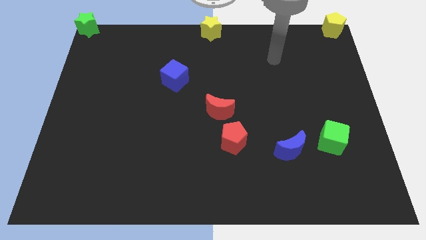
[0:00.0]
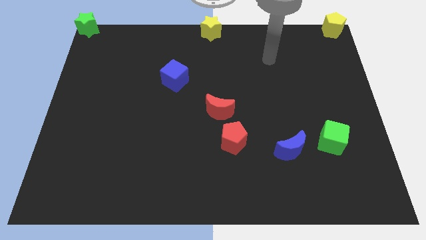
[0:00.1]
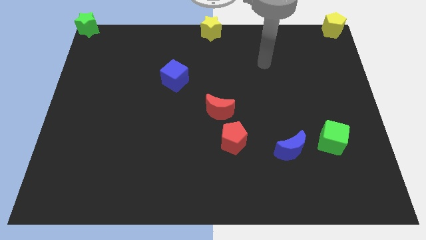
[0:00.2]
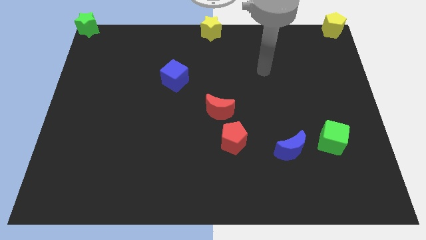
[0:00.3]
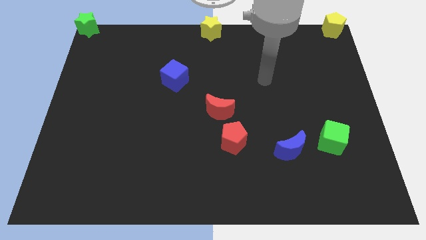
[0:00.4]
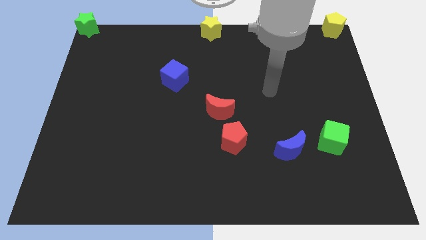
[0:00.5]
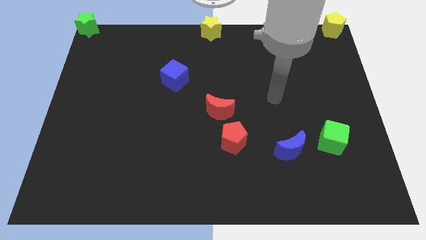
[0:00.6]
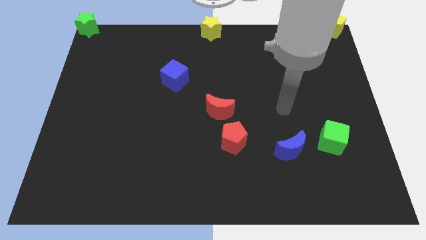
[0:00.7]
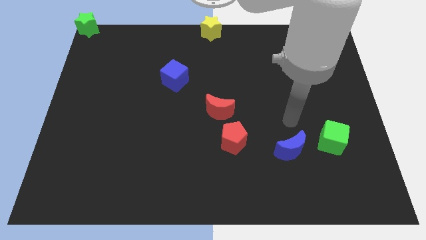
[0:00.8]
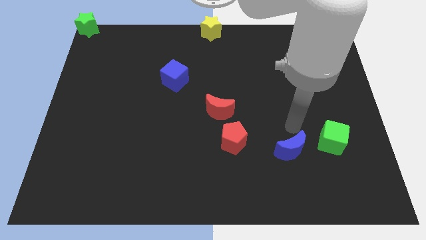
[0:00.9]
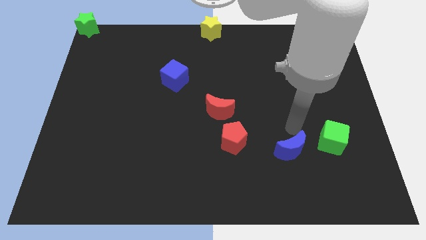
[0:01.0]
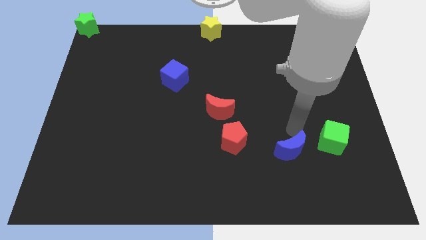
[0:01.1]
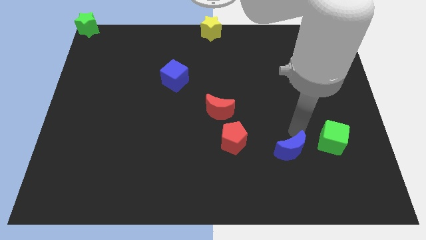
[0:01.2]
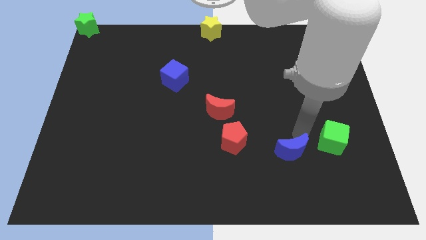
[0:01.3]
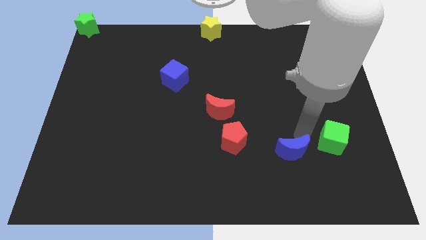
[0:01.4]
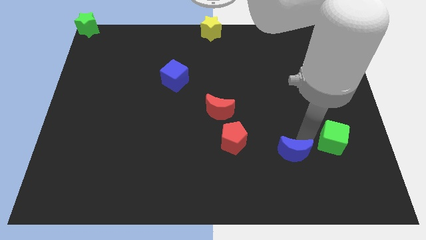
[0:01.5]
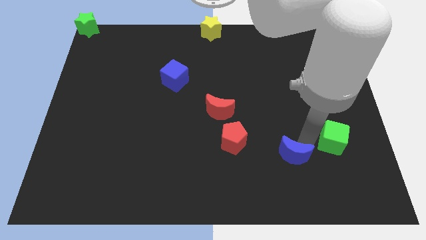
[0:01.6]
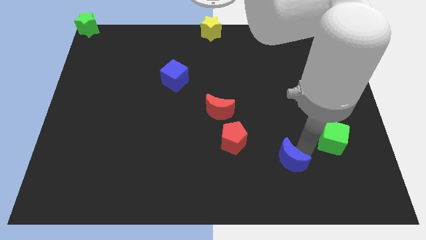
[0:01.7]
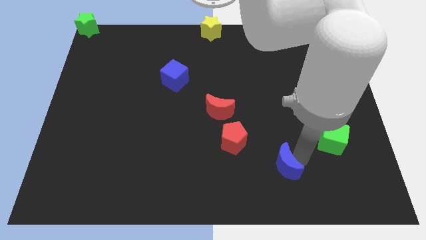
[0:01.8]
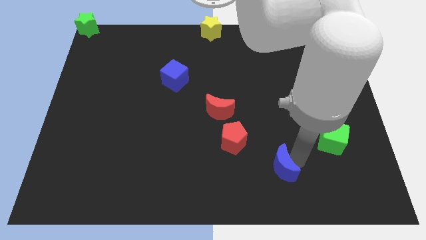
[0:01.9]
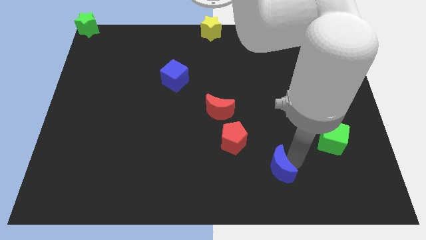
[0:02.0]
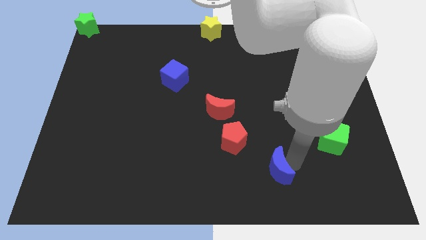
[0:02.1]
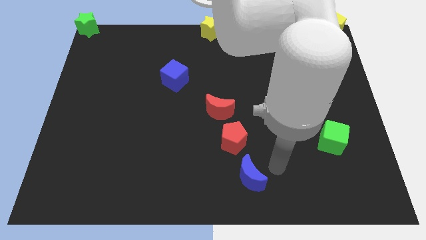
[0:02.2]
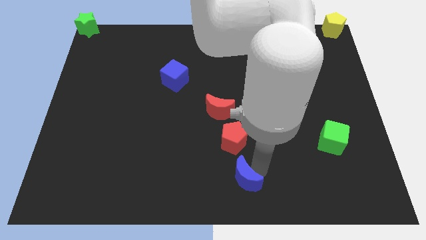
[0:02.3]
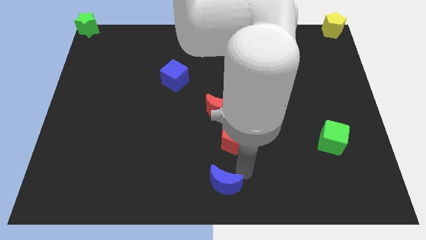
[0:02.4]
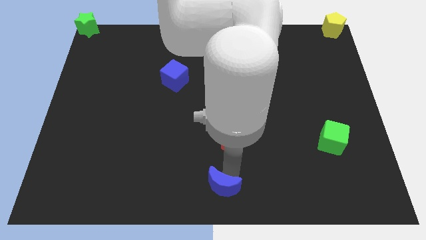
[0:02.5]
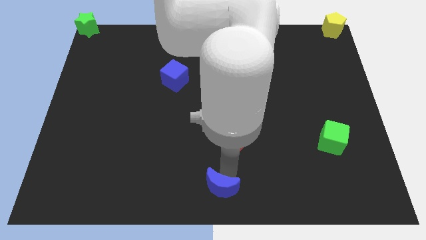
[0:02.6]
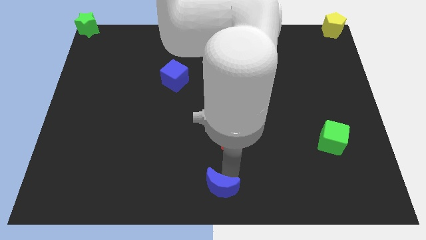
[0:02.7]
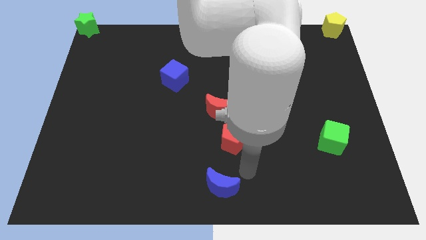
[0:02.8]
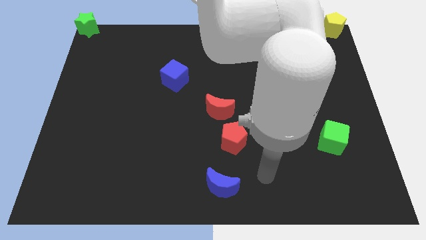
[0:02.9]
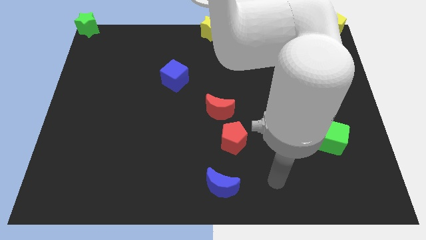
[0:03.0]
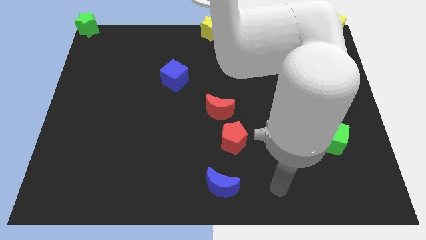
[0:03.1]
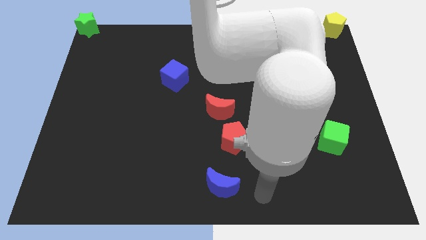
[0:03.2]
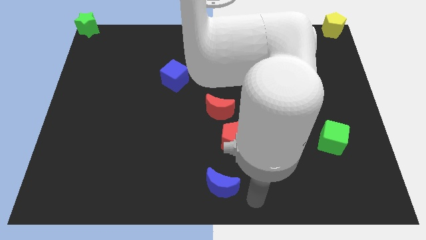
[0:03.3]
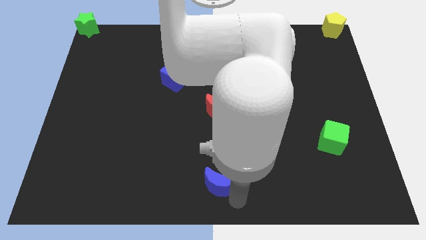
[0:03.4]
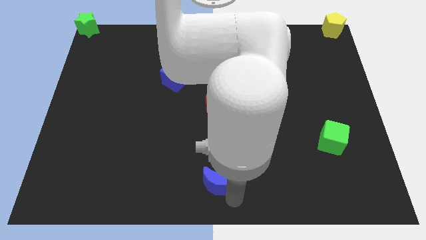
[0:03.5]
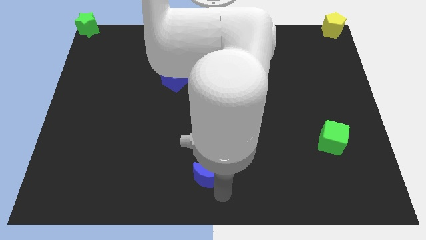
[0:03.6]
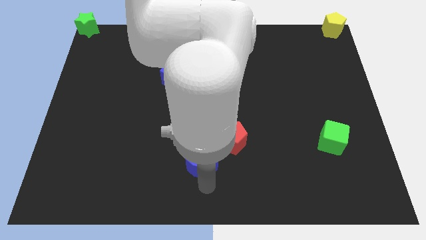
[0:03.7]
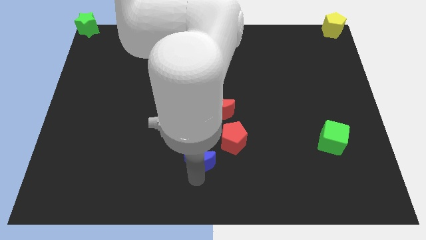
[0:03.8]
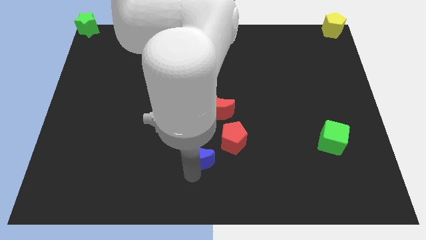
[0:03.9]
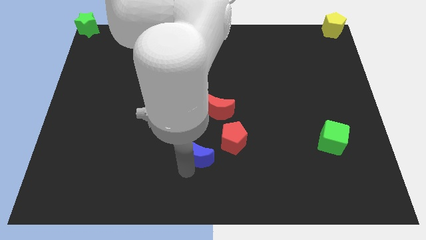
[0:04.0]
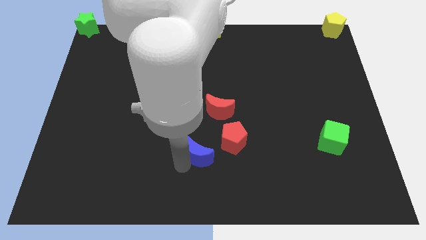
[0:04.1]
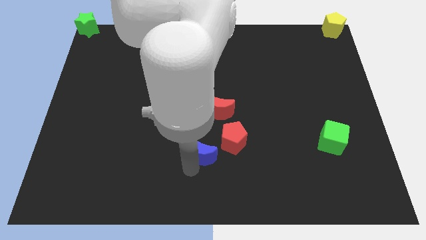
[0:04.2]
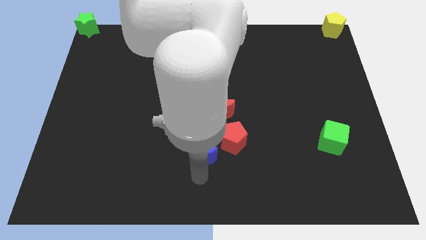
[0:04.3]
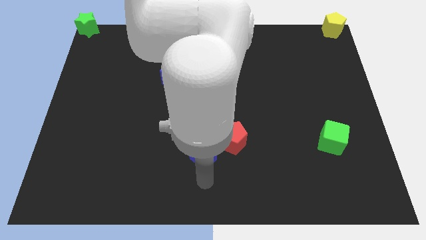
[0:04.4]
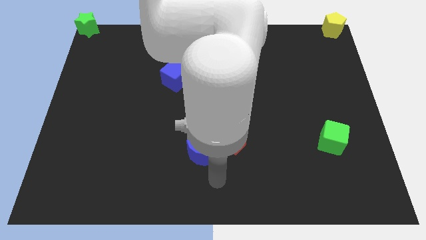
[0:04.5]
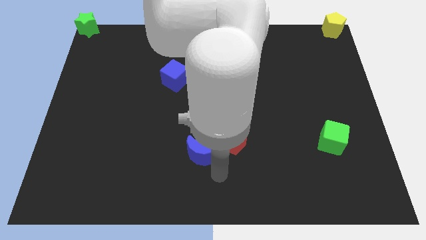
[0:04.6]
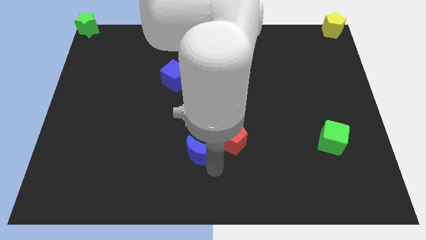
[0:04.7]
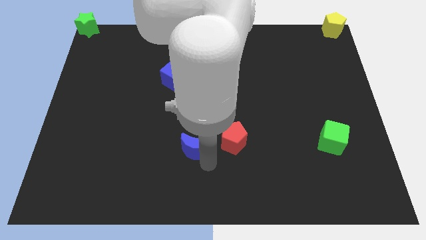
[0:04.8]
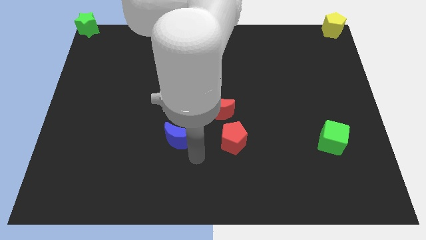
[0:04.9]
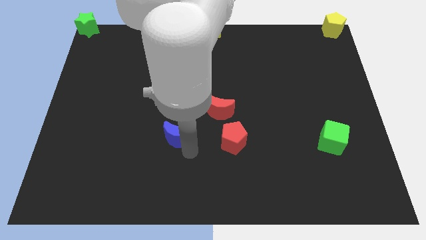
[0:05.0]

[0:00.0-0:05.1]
place the blue moon below the red moon

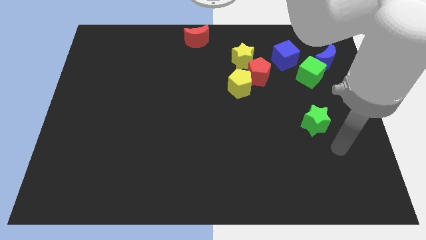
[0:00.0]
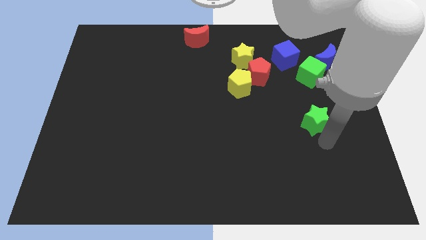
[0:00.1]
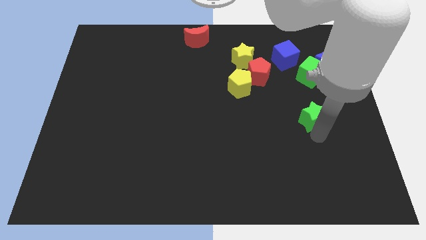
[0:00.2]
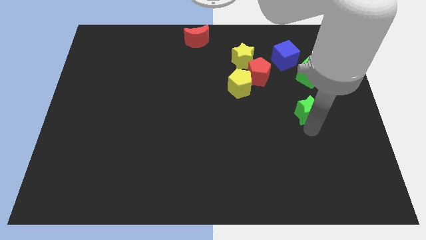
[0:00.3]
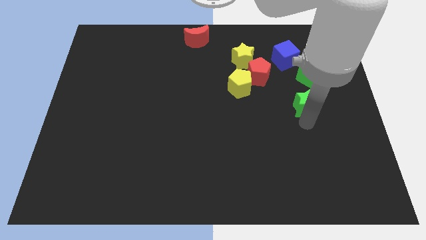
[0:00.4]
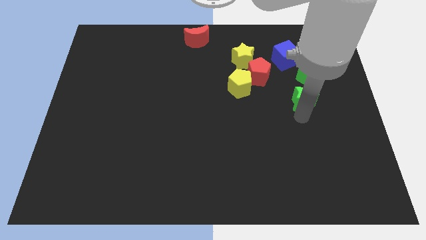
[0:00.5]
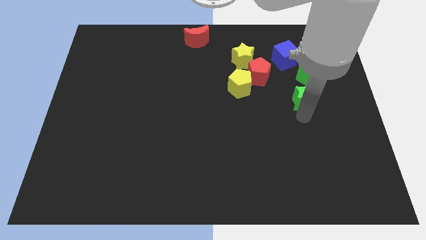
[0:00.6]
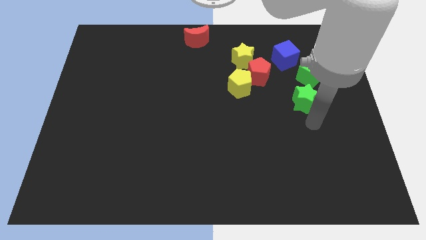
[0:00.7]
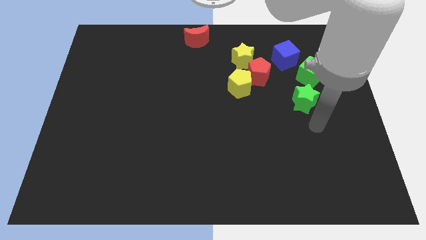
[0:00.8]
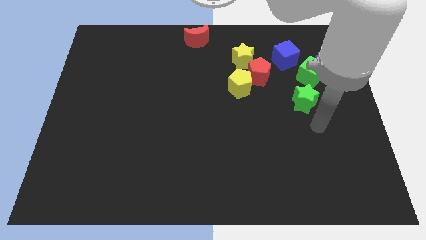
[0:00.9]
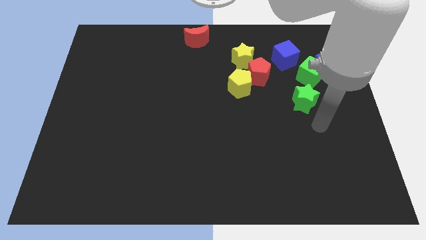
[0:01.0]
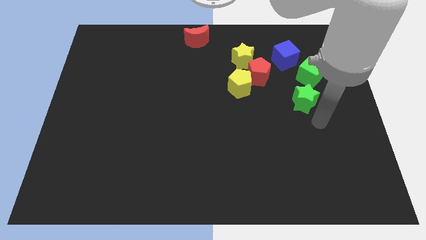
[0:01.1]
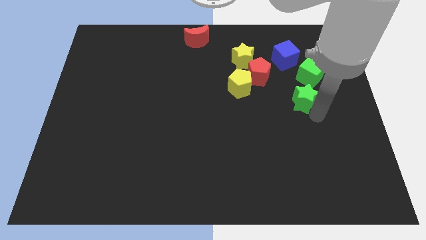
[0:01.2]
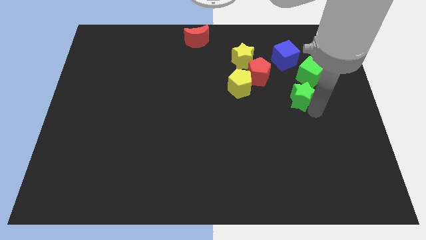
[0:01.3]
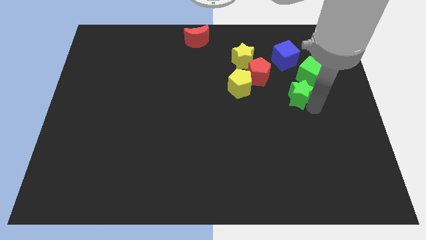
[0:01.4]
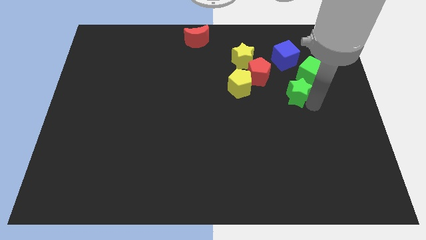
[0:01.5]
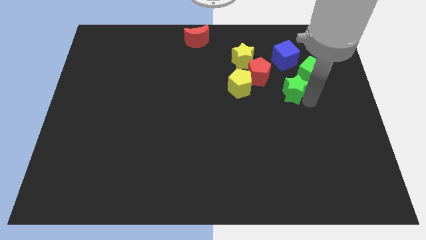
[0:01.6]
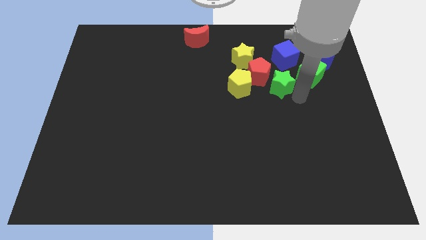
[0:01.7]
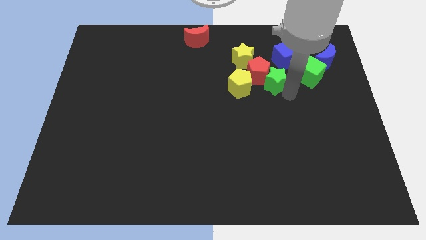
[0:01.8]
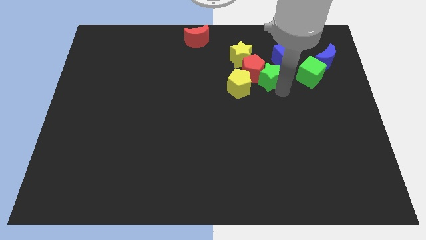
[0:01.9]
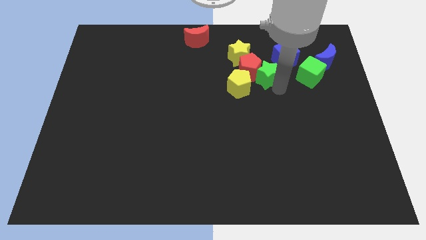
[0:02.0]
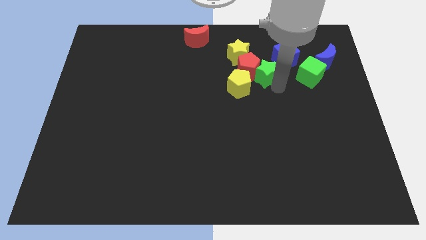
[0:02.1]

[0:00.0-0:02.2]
slide the green star into the red pentagon

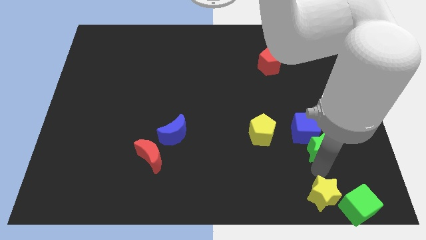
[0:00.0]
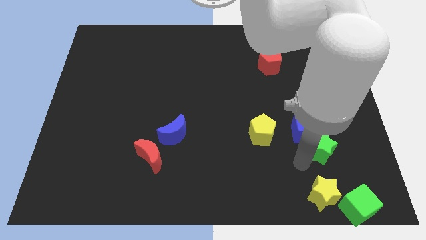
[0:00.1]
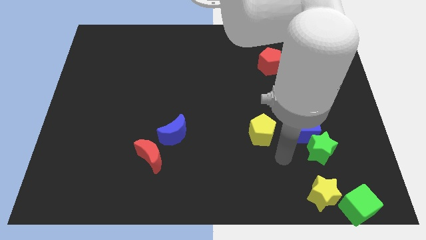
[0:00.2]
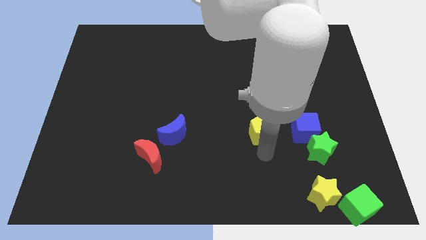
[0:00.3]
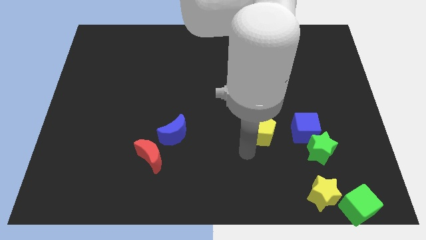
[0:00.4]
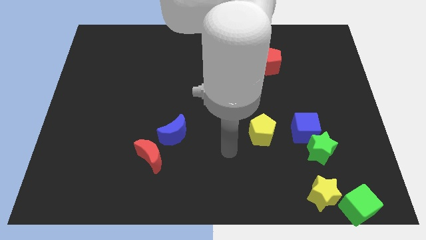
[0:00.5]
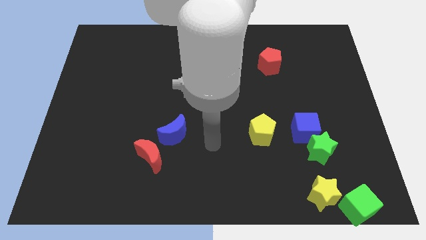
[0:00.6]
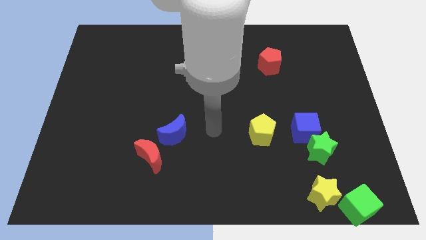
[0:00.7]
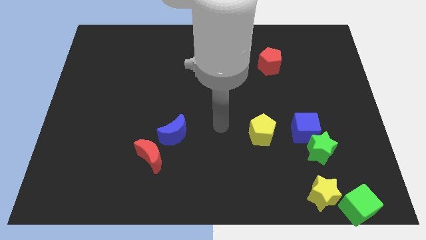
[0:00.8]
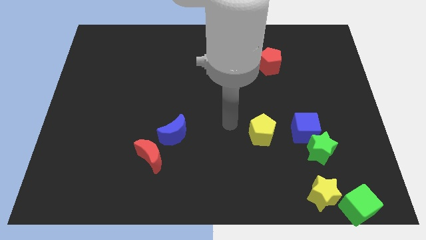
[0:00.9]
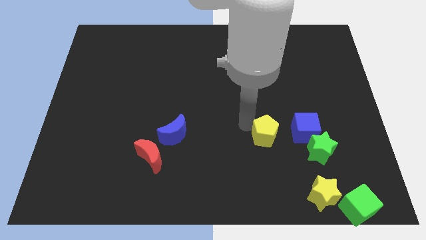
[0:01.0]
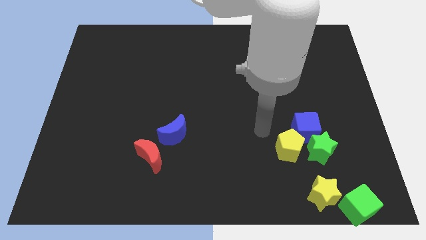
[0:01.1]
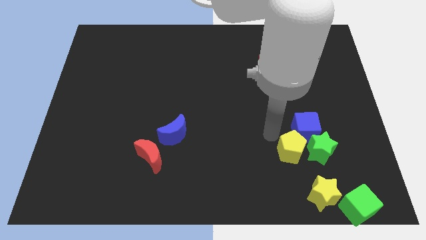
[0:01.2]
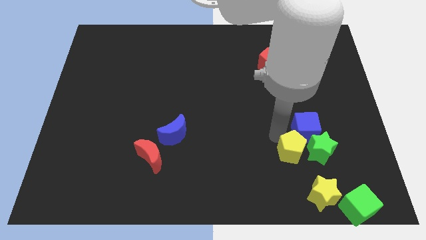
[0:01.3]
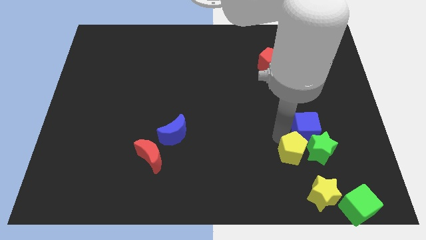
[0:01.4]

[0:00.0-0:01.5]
move the yellow pentagon to the left of the green star

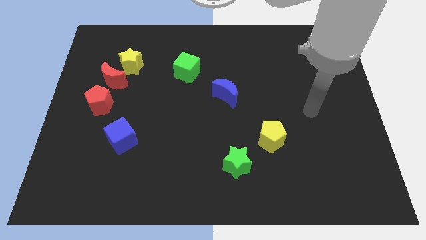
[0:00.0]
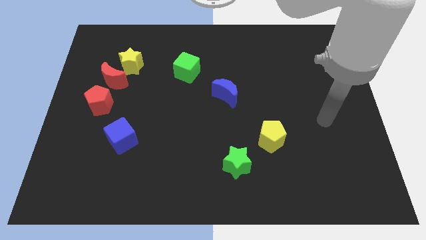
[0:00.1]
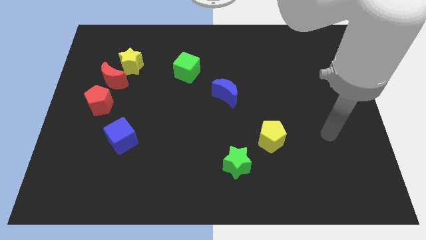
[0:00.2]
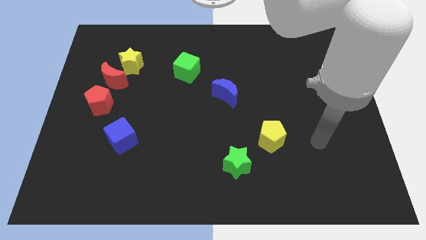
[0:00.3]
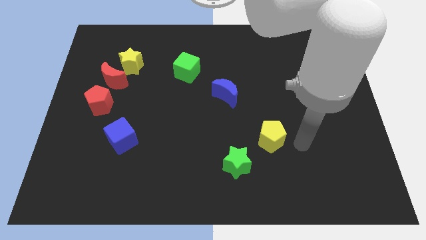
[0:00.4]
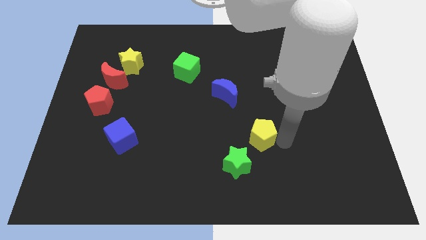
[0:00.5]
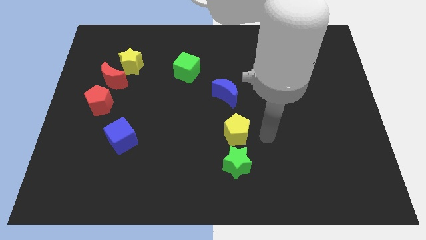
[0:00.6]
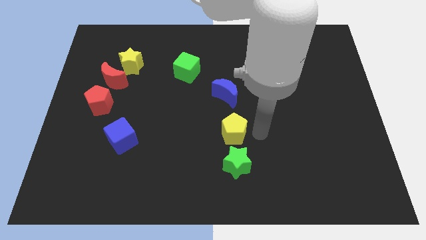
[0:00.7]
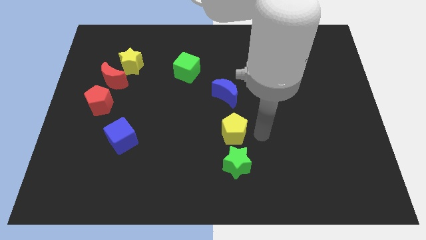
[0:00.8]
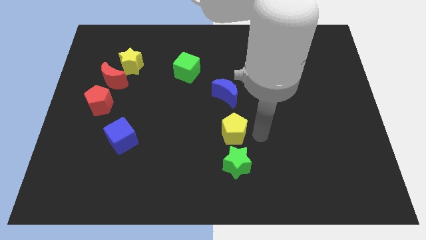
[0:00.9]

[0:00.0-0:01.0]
place the yellow pentagon in between the green star and blue crescent
